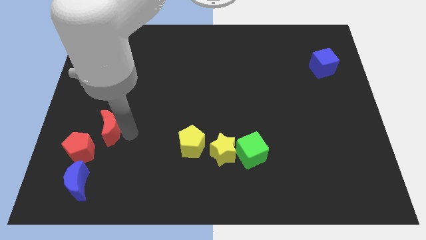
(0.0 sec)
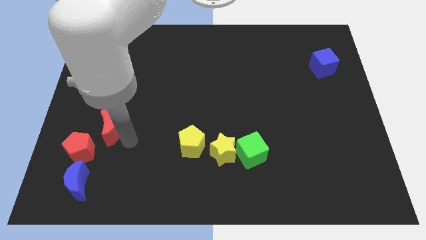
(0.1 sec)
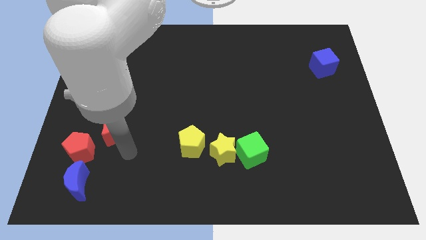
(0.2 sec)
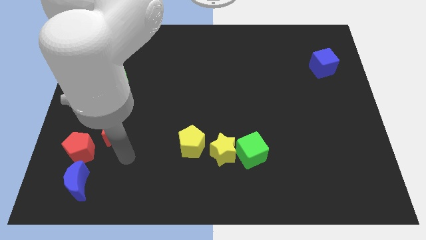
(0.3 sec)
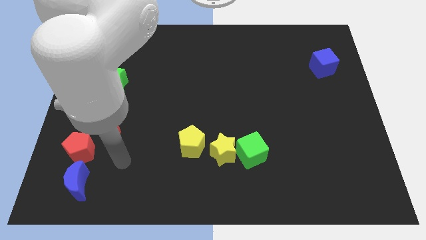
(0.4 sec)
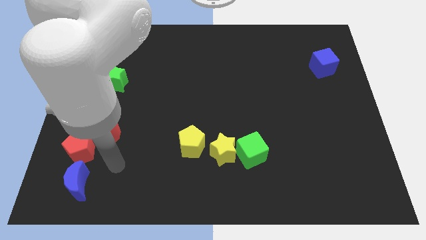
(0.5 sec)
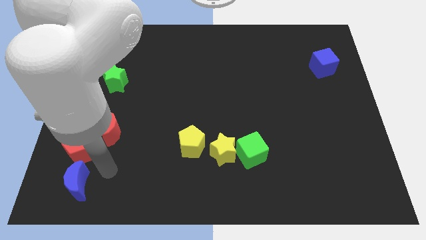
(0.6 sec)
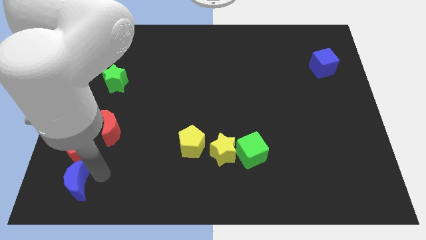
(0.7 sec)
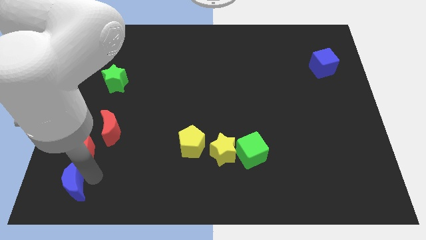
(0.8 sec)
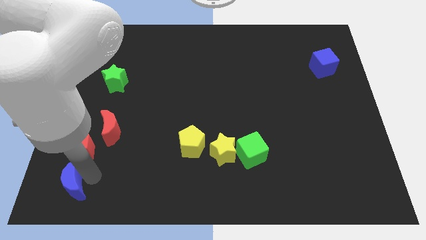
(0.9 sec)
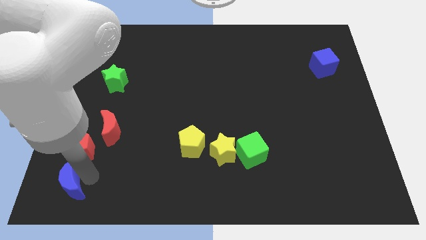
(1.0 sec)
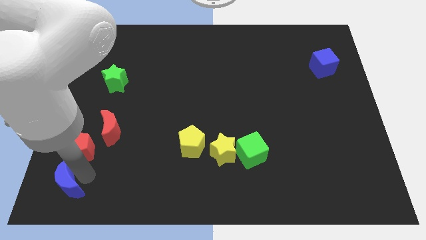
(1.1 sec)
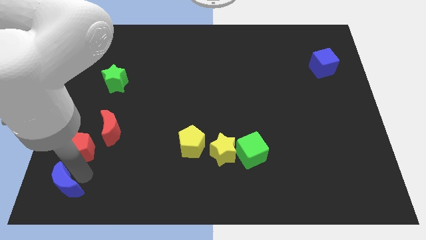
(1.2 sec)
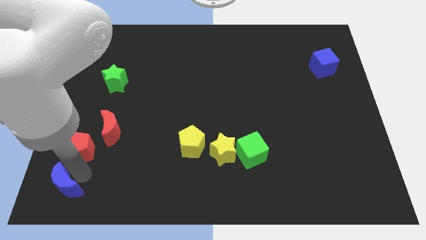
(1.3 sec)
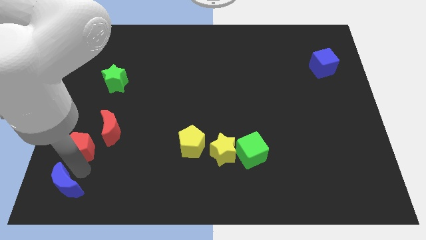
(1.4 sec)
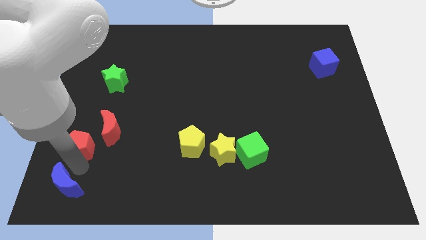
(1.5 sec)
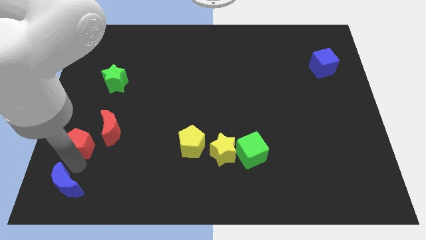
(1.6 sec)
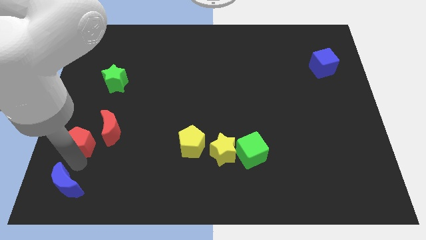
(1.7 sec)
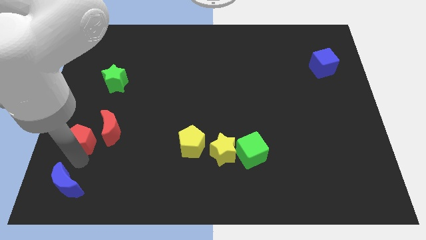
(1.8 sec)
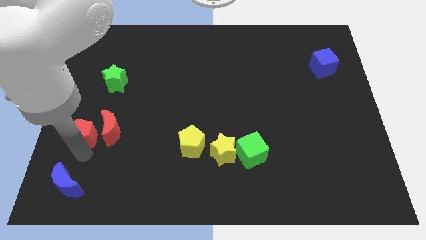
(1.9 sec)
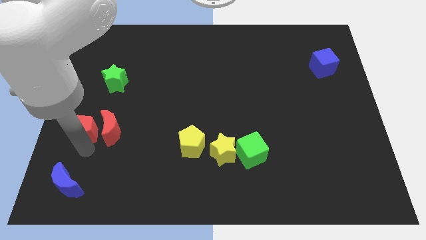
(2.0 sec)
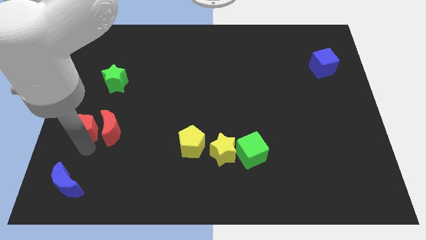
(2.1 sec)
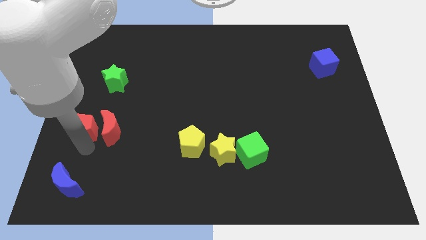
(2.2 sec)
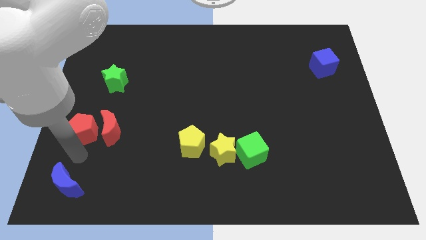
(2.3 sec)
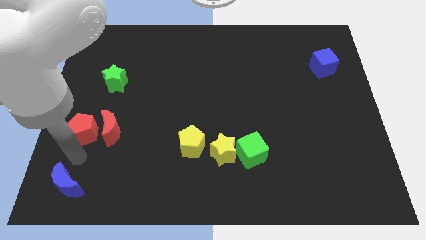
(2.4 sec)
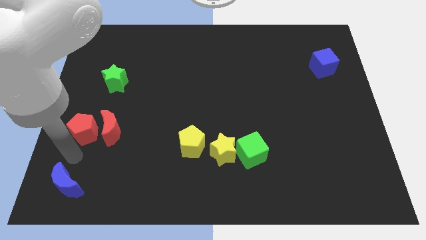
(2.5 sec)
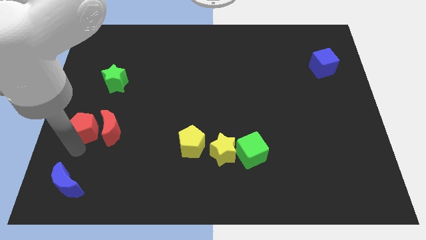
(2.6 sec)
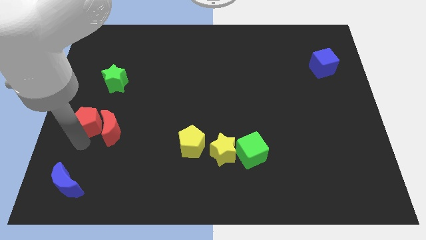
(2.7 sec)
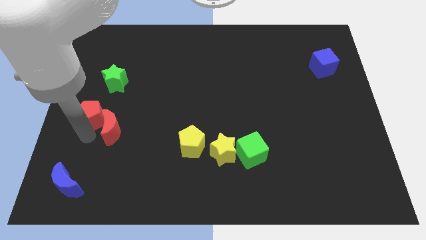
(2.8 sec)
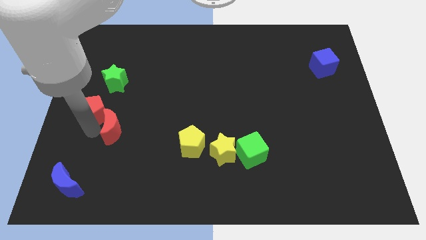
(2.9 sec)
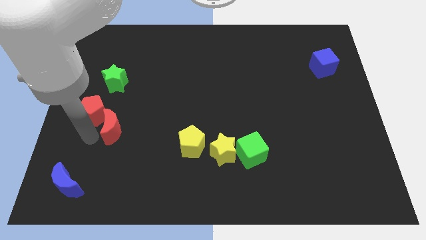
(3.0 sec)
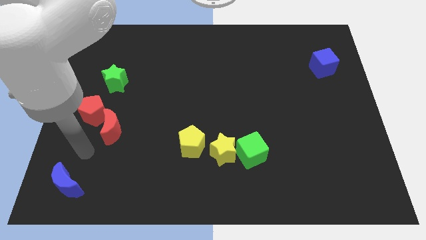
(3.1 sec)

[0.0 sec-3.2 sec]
separate the red pentagon from blue crescent

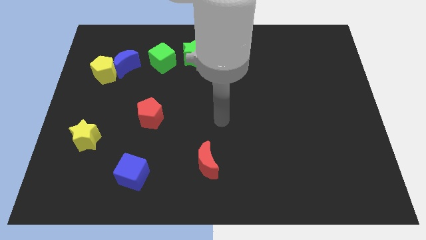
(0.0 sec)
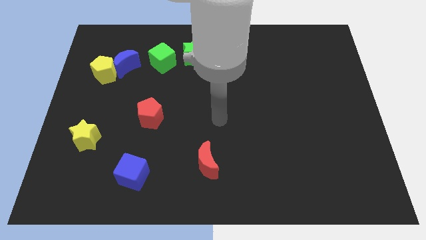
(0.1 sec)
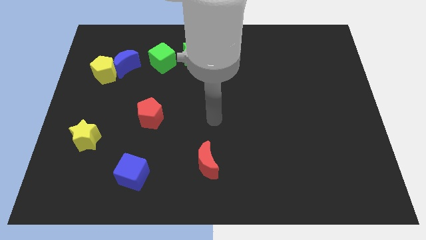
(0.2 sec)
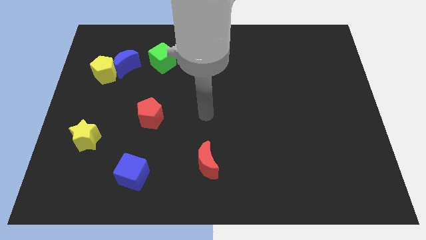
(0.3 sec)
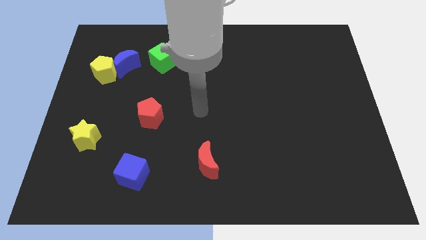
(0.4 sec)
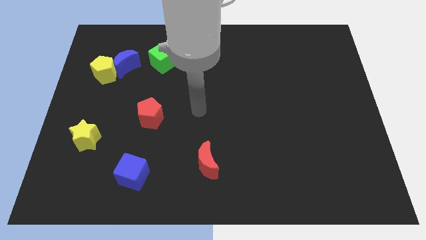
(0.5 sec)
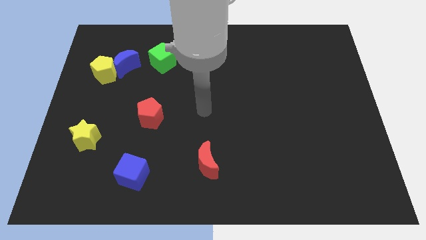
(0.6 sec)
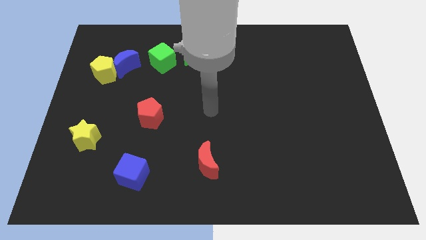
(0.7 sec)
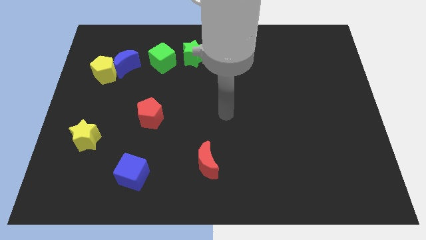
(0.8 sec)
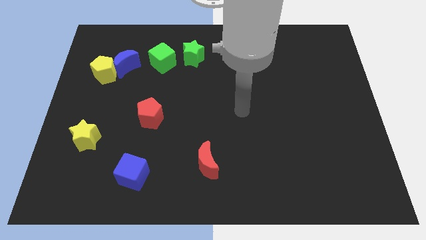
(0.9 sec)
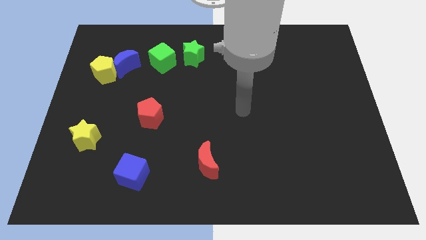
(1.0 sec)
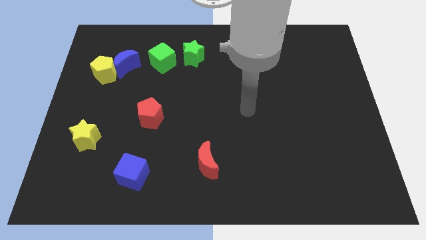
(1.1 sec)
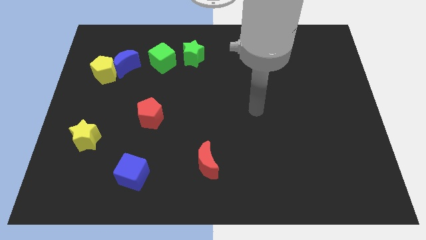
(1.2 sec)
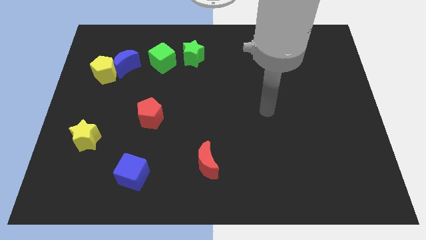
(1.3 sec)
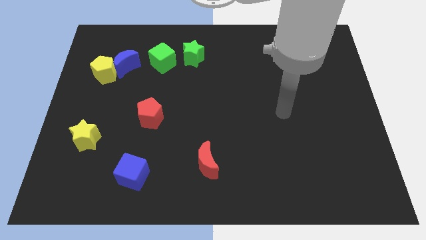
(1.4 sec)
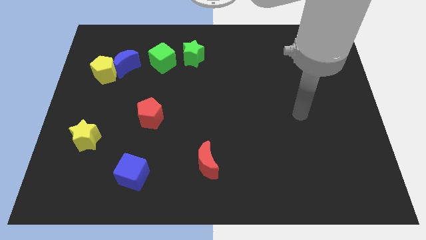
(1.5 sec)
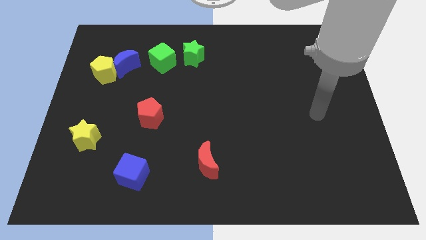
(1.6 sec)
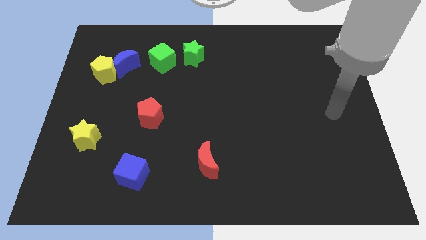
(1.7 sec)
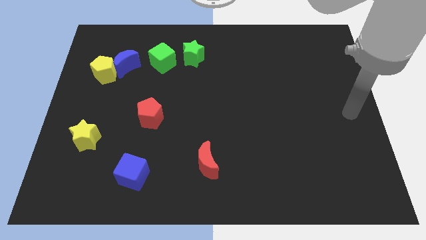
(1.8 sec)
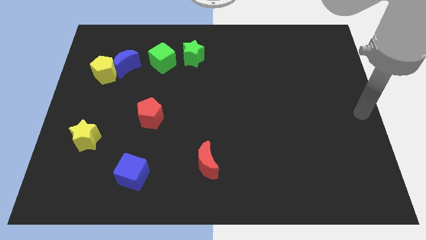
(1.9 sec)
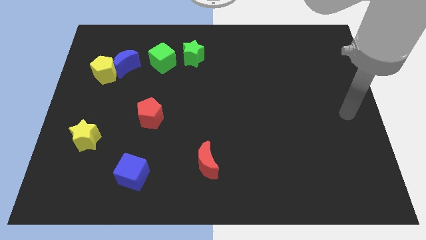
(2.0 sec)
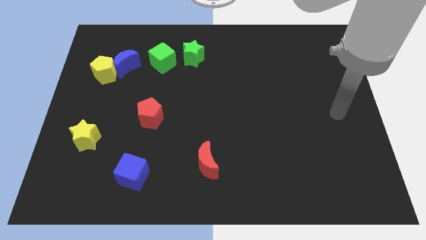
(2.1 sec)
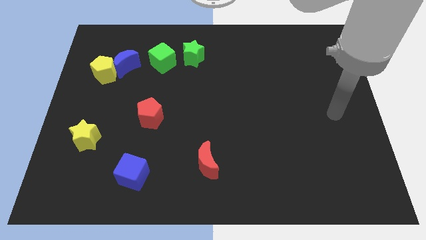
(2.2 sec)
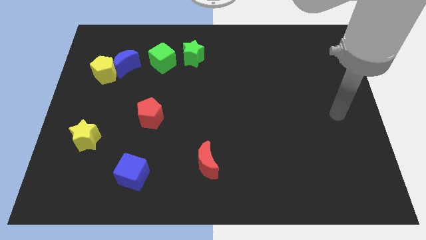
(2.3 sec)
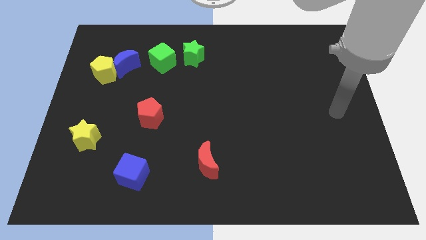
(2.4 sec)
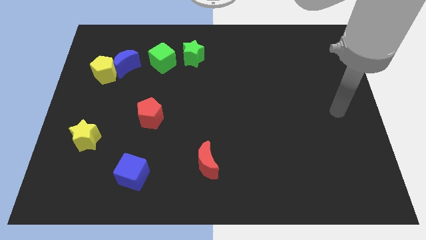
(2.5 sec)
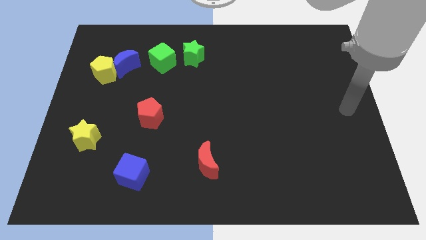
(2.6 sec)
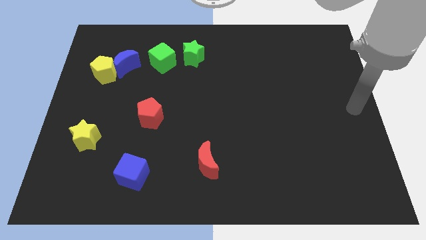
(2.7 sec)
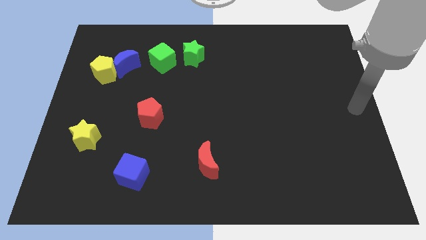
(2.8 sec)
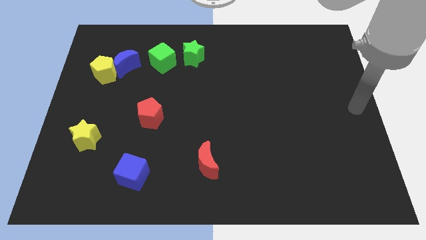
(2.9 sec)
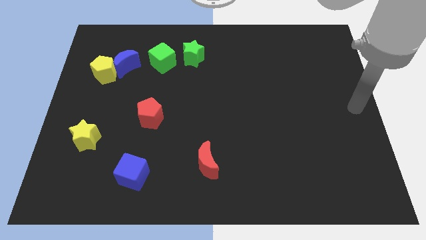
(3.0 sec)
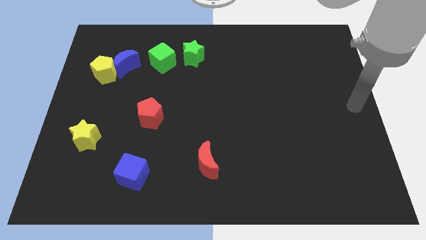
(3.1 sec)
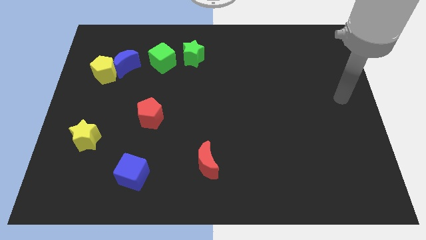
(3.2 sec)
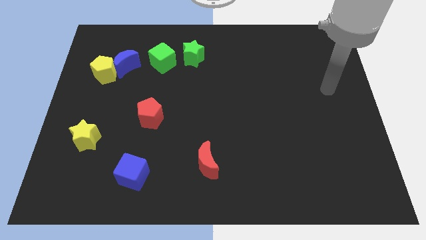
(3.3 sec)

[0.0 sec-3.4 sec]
move your hand away from the red pentagon

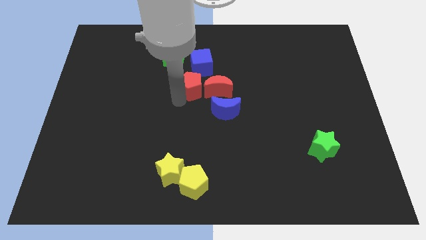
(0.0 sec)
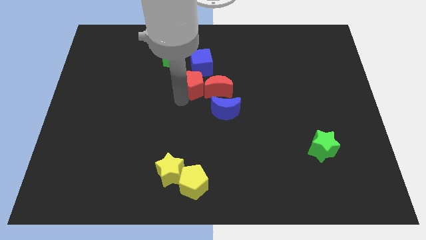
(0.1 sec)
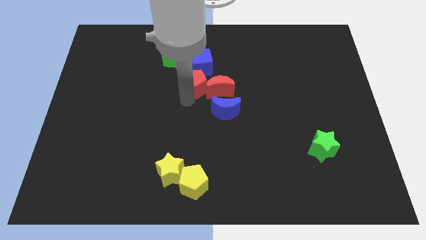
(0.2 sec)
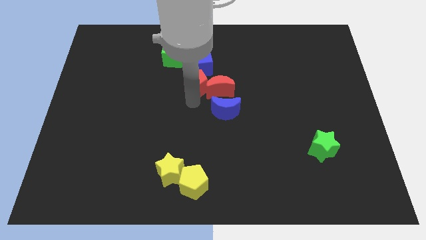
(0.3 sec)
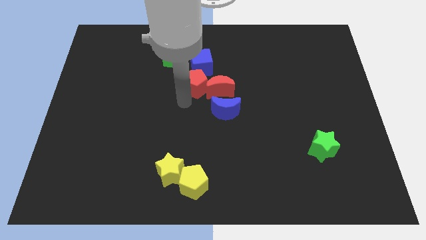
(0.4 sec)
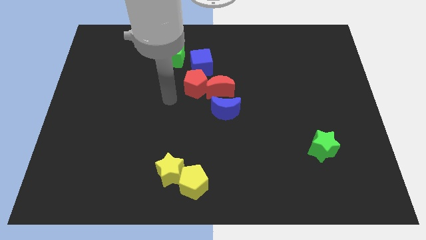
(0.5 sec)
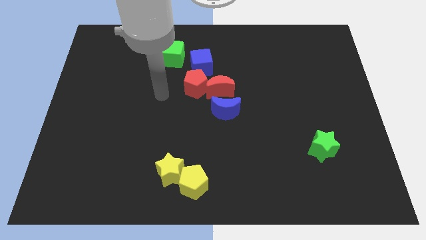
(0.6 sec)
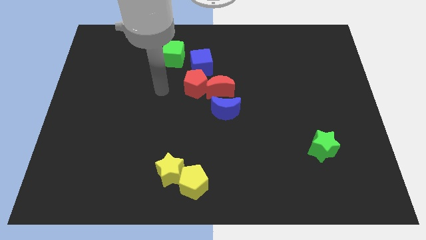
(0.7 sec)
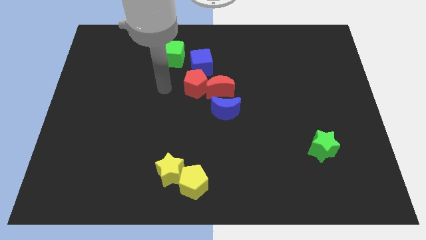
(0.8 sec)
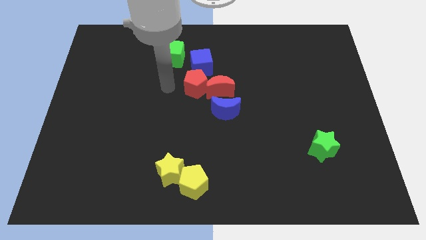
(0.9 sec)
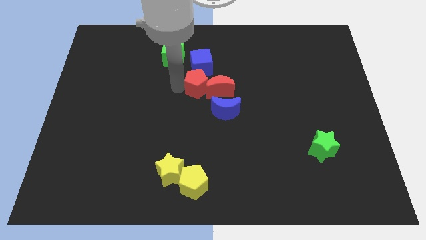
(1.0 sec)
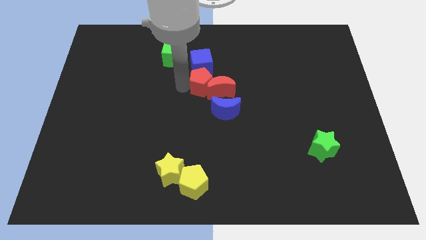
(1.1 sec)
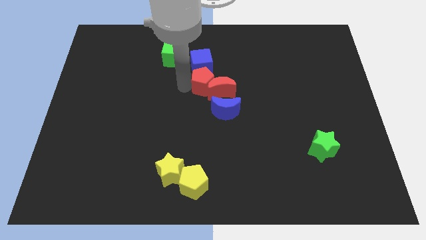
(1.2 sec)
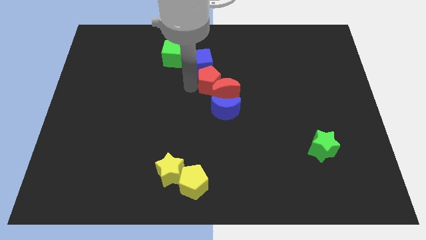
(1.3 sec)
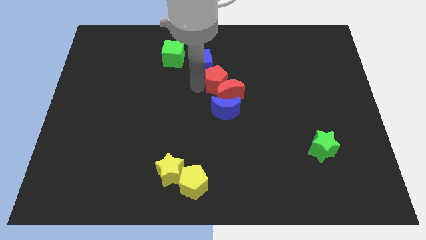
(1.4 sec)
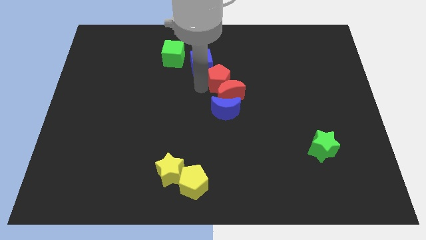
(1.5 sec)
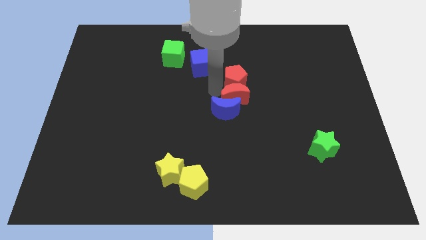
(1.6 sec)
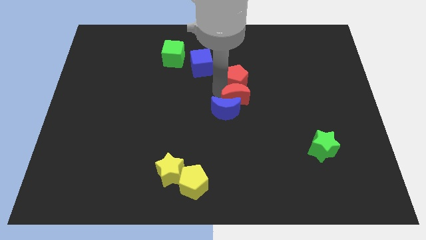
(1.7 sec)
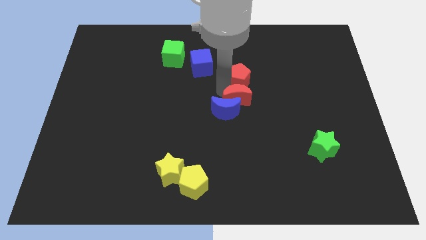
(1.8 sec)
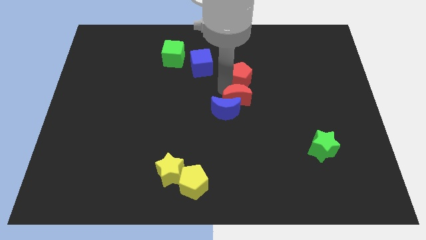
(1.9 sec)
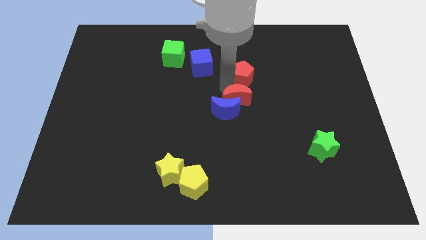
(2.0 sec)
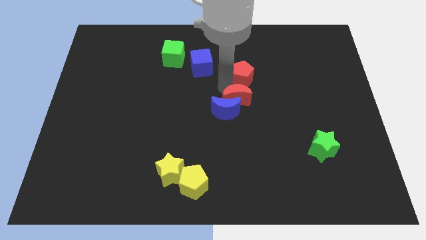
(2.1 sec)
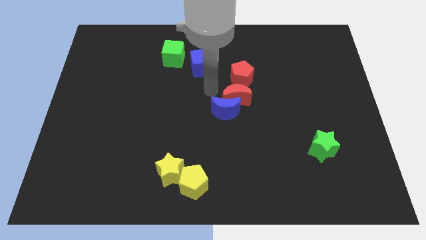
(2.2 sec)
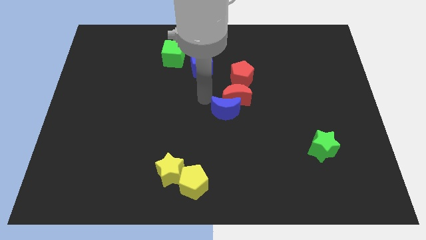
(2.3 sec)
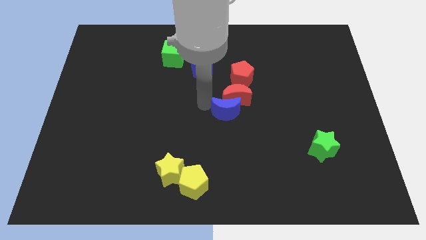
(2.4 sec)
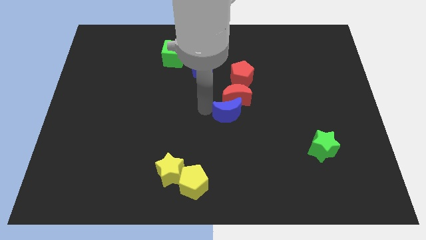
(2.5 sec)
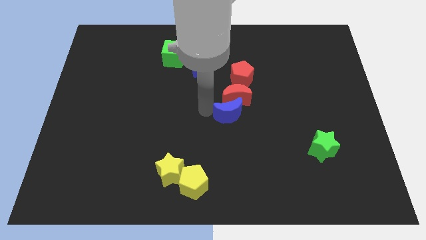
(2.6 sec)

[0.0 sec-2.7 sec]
move the red pentagon to the top of the red crescent
